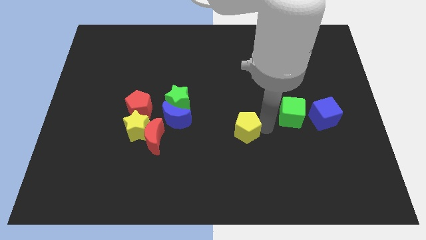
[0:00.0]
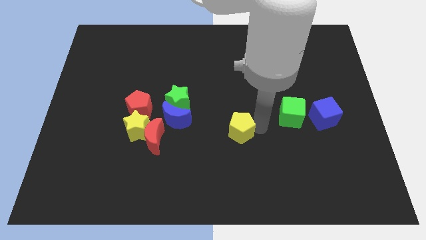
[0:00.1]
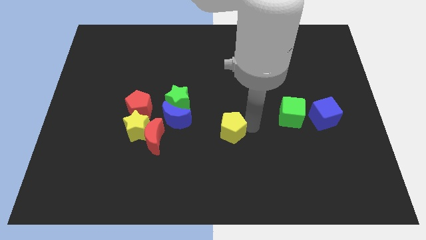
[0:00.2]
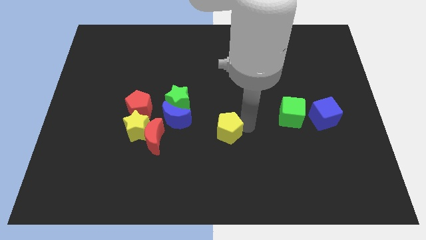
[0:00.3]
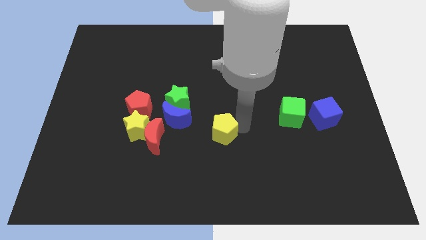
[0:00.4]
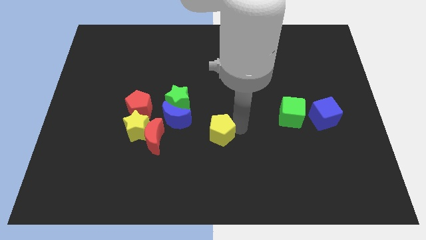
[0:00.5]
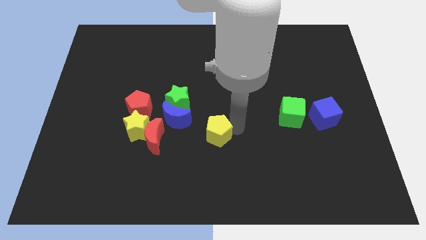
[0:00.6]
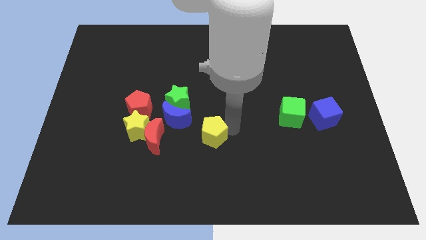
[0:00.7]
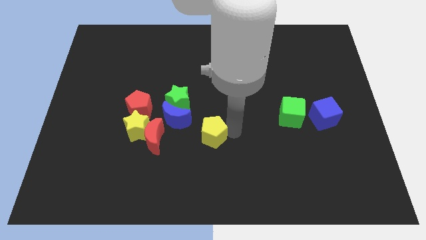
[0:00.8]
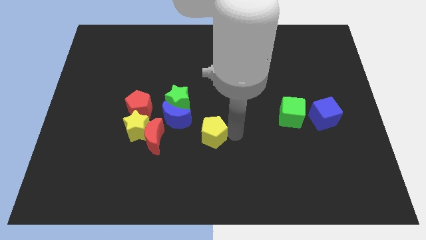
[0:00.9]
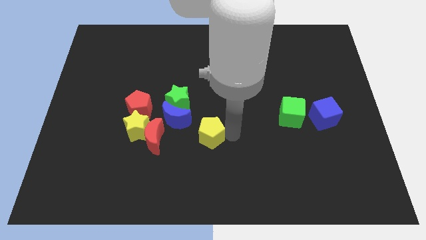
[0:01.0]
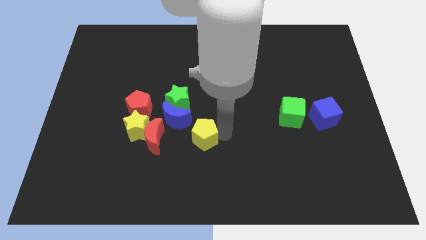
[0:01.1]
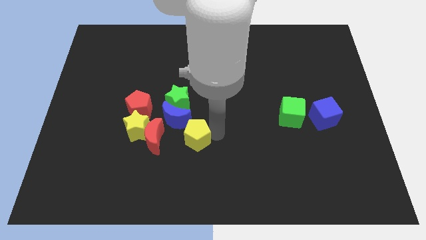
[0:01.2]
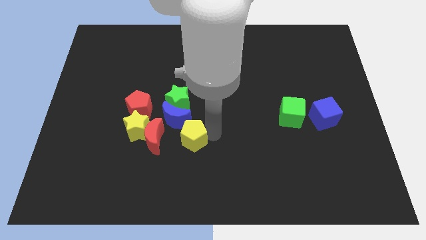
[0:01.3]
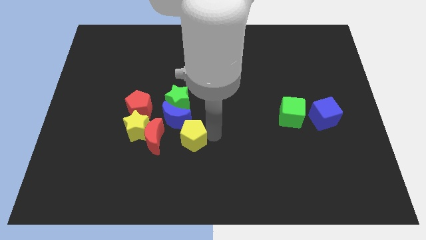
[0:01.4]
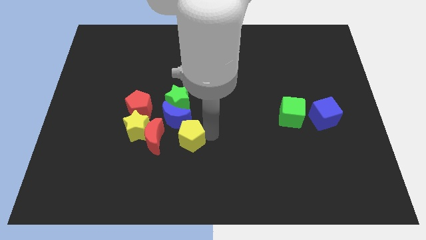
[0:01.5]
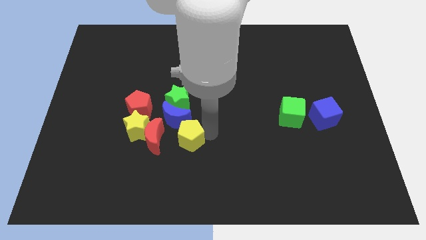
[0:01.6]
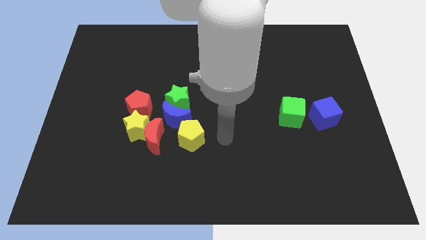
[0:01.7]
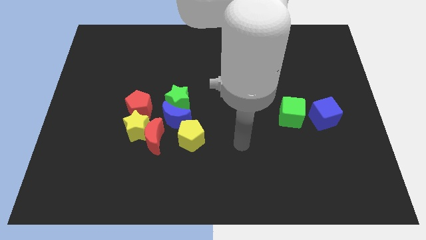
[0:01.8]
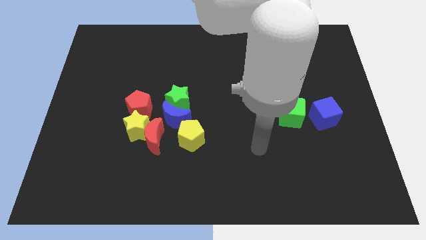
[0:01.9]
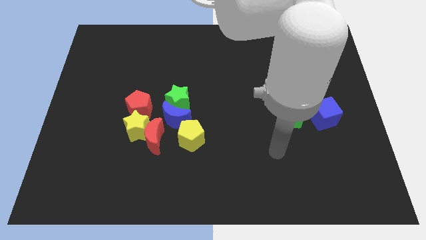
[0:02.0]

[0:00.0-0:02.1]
push yellow pentagon towards red moon

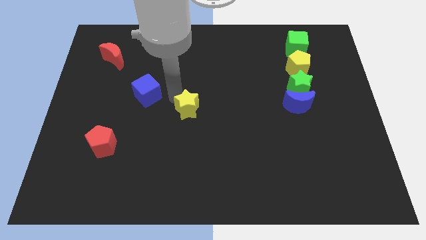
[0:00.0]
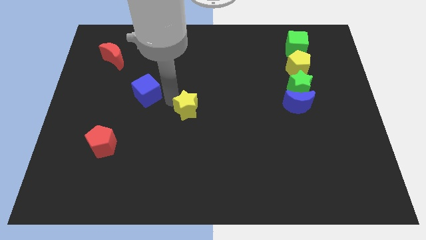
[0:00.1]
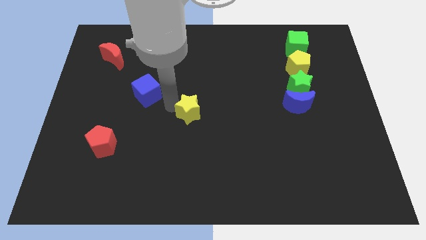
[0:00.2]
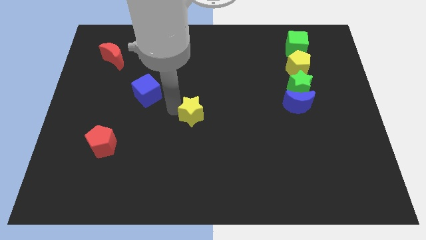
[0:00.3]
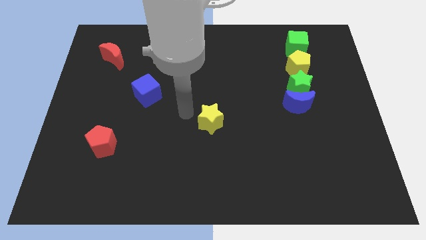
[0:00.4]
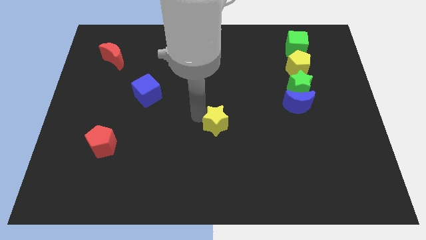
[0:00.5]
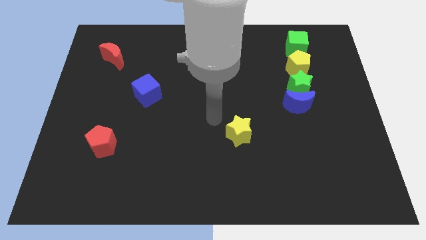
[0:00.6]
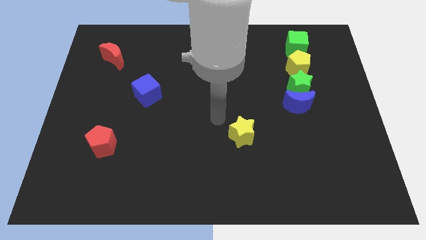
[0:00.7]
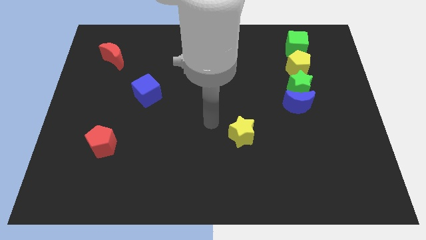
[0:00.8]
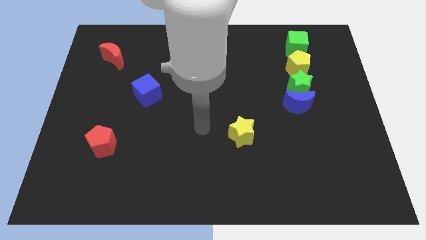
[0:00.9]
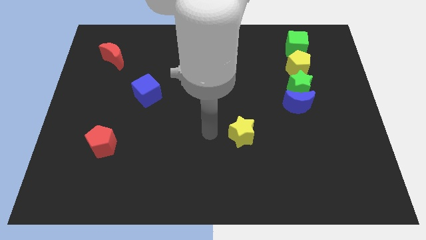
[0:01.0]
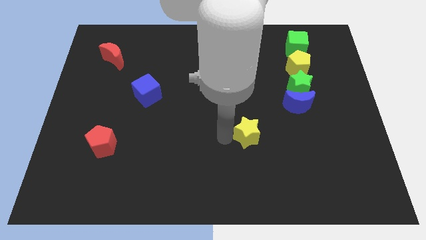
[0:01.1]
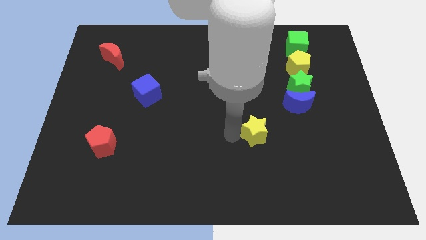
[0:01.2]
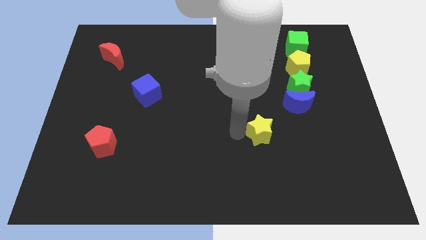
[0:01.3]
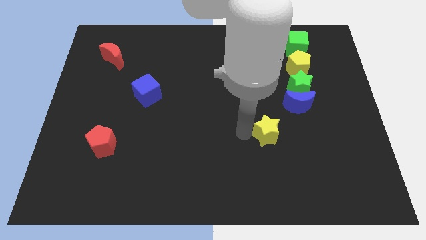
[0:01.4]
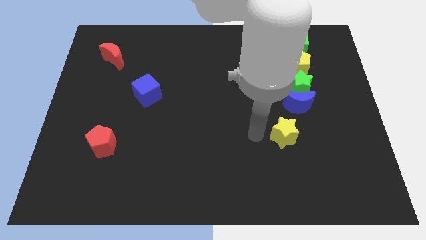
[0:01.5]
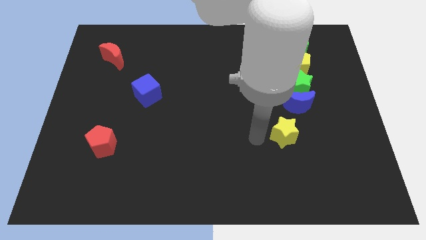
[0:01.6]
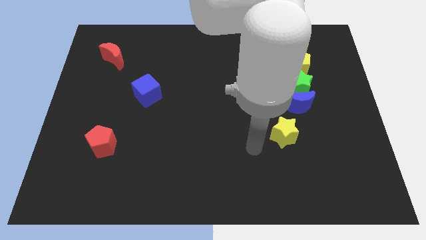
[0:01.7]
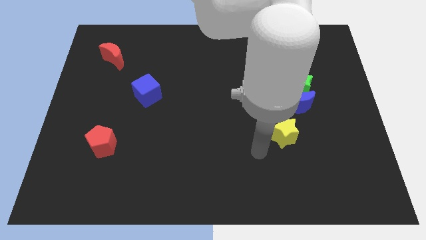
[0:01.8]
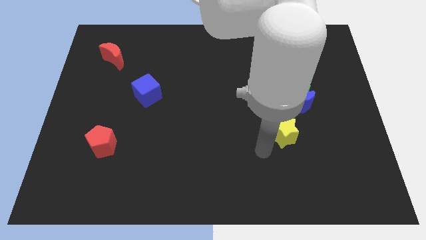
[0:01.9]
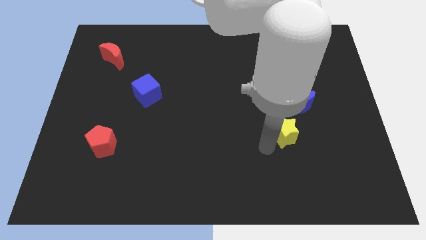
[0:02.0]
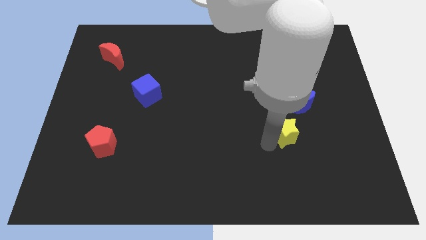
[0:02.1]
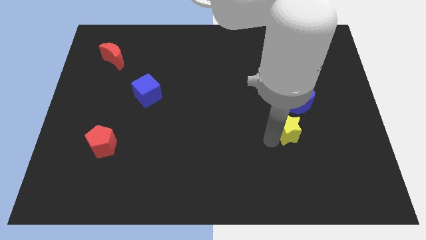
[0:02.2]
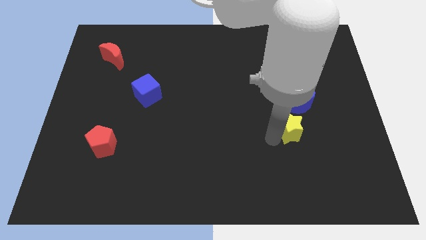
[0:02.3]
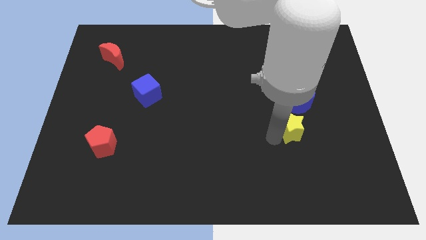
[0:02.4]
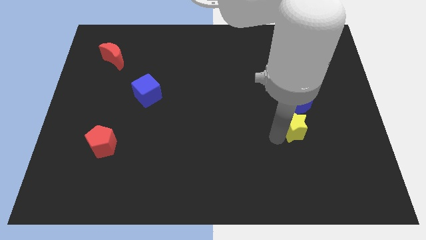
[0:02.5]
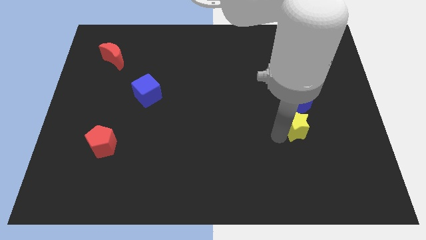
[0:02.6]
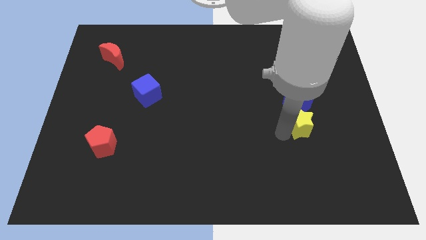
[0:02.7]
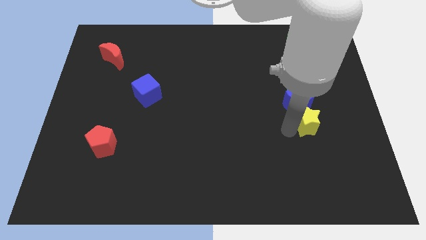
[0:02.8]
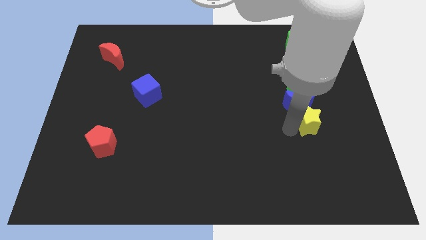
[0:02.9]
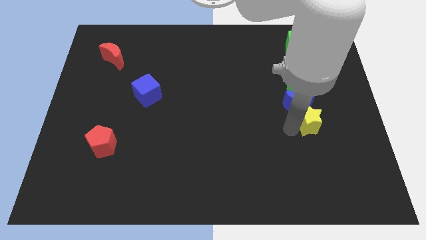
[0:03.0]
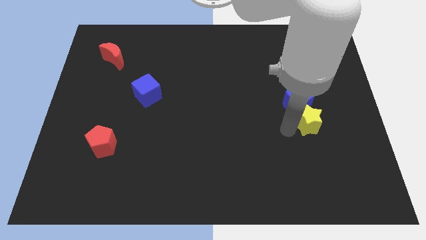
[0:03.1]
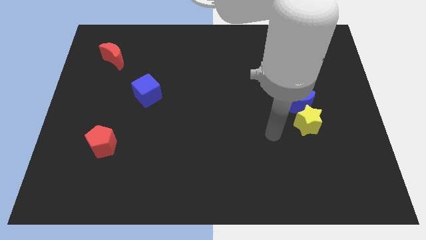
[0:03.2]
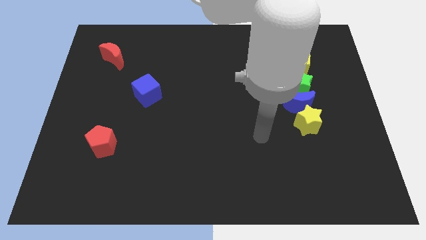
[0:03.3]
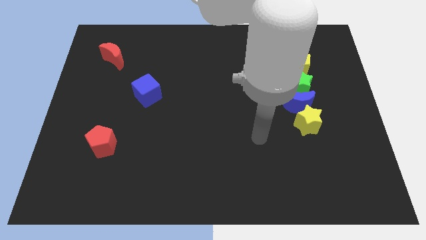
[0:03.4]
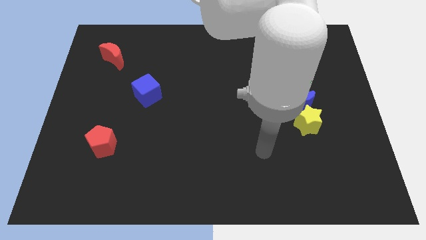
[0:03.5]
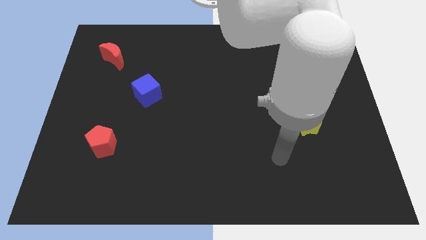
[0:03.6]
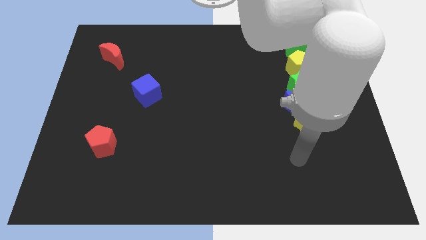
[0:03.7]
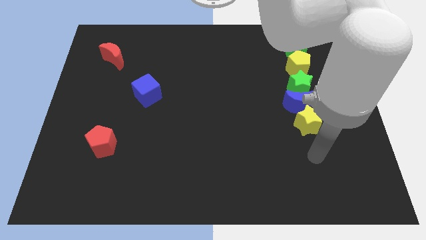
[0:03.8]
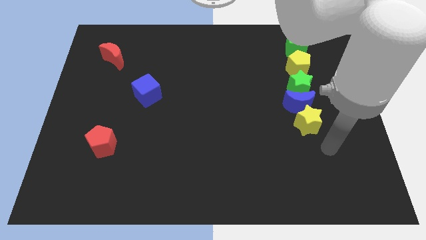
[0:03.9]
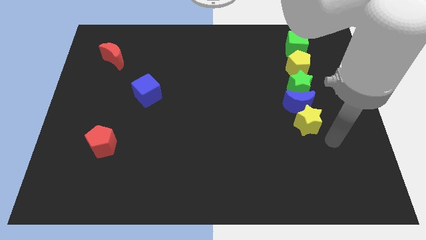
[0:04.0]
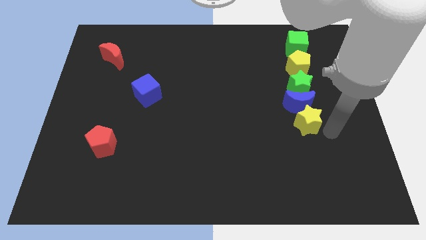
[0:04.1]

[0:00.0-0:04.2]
place the yellow star under the blue crescent

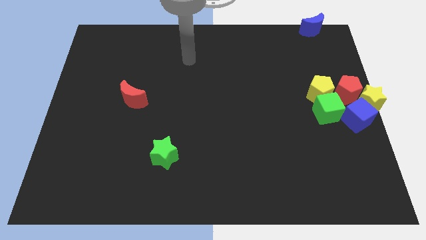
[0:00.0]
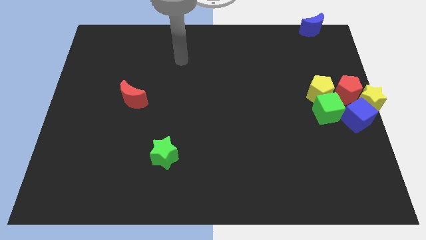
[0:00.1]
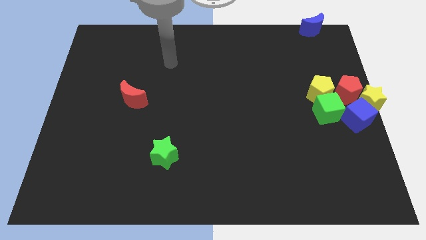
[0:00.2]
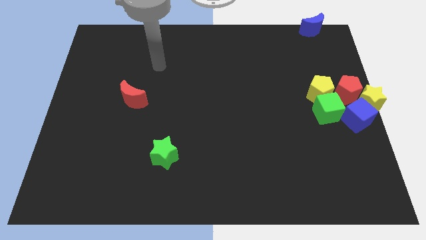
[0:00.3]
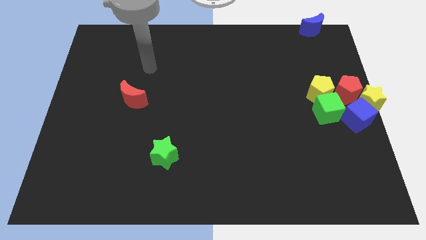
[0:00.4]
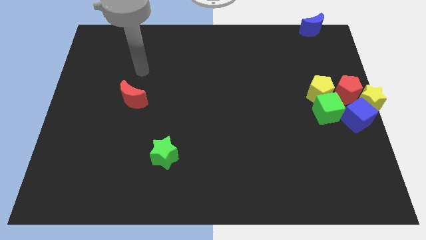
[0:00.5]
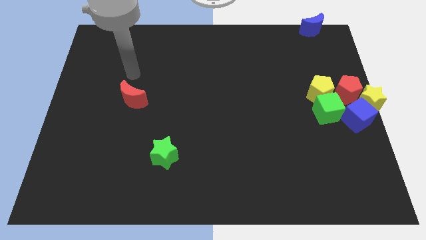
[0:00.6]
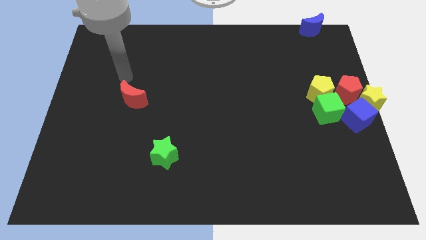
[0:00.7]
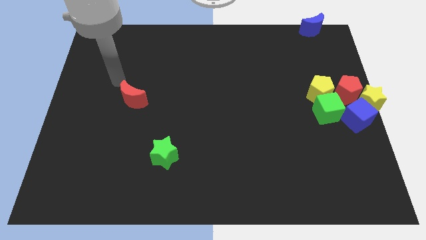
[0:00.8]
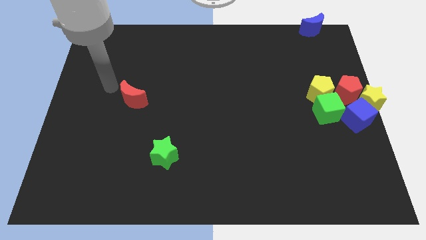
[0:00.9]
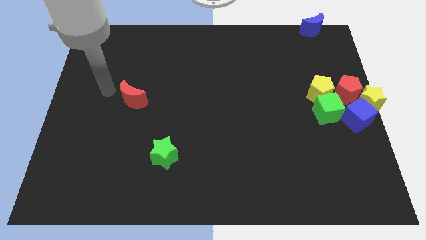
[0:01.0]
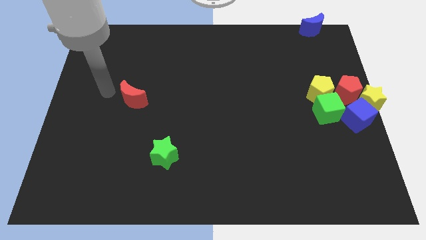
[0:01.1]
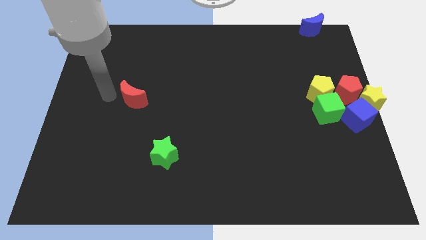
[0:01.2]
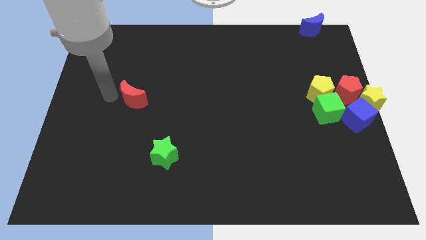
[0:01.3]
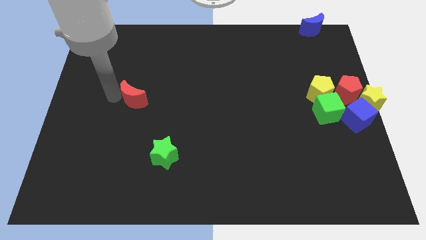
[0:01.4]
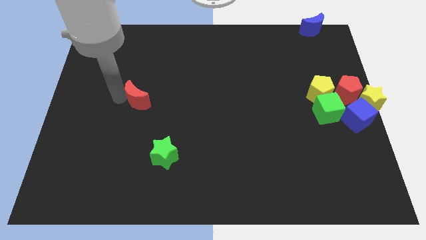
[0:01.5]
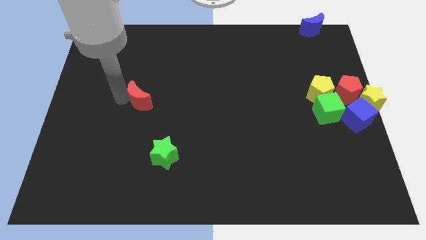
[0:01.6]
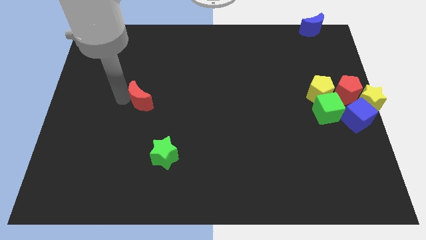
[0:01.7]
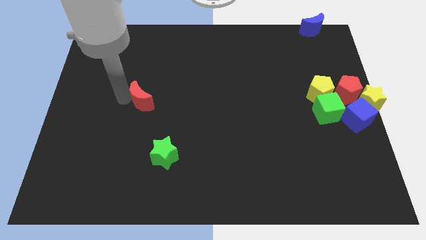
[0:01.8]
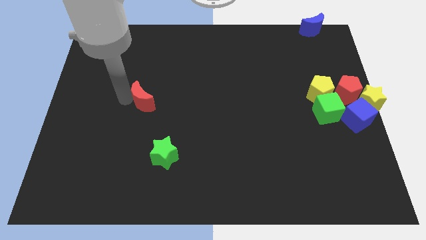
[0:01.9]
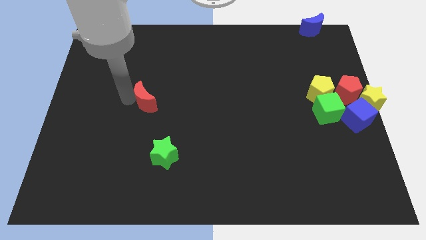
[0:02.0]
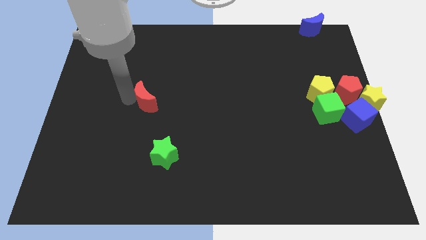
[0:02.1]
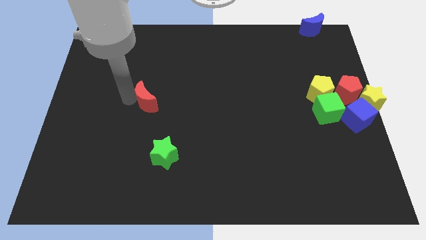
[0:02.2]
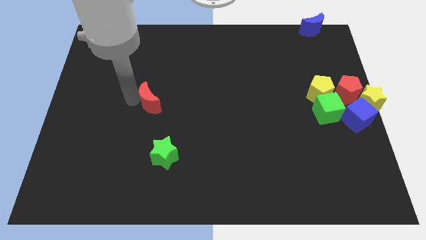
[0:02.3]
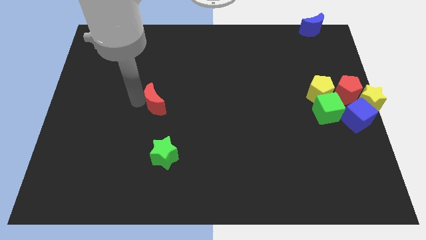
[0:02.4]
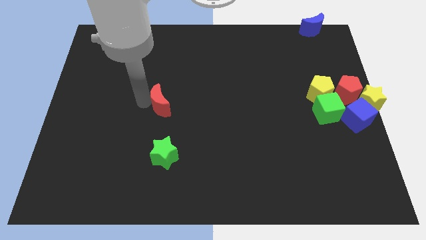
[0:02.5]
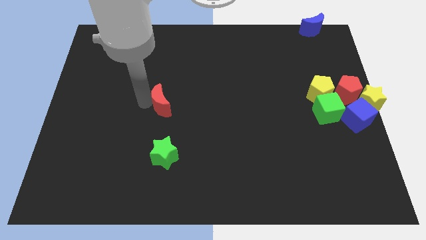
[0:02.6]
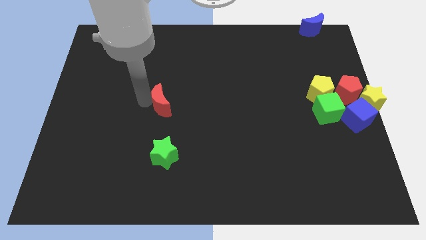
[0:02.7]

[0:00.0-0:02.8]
put the red moon vertically on the top of the green star
